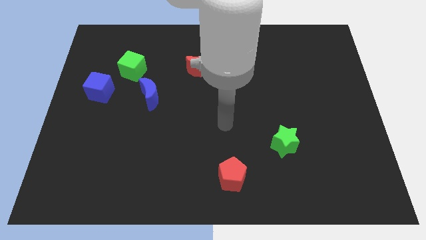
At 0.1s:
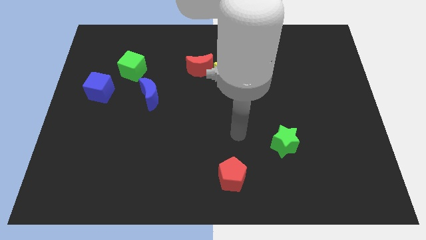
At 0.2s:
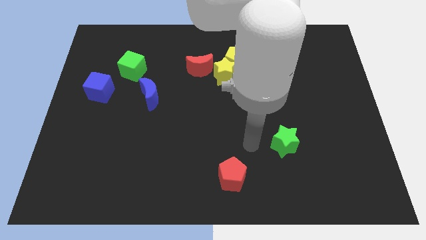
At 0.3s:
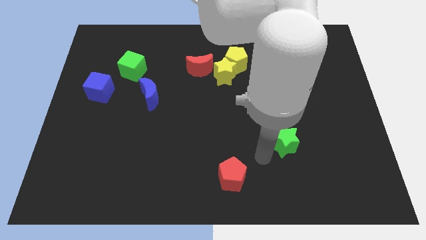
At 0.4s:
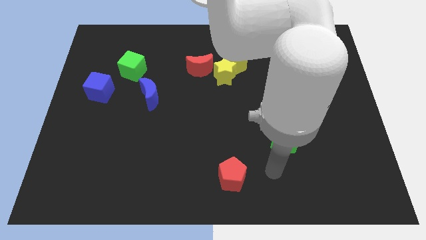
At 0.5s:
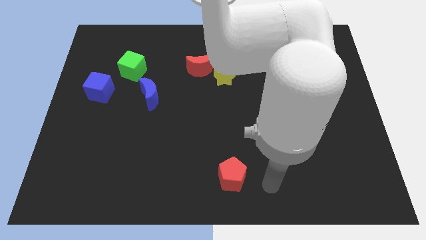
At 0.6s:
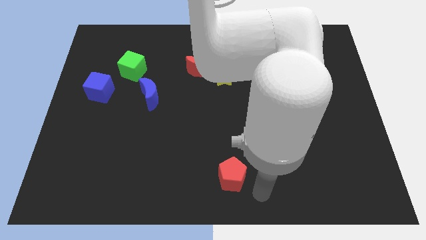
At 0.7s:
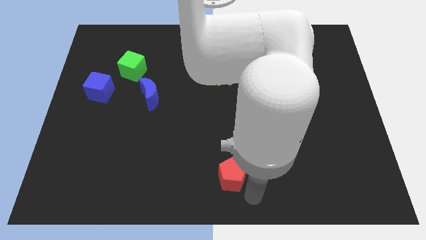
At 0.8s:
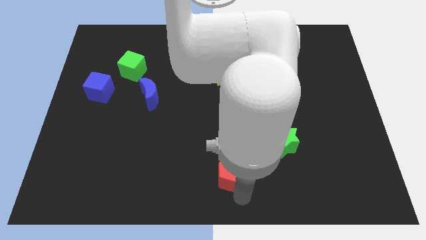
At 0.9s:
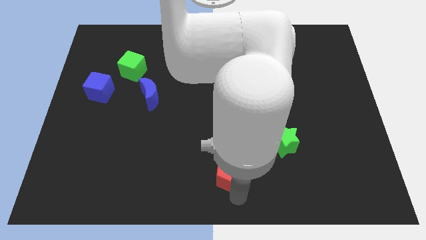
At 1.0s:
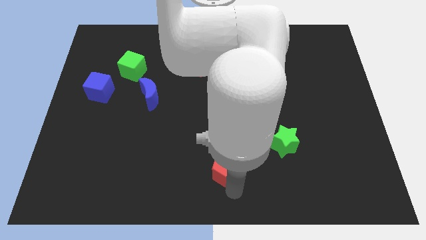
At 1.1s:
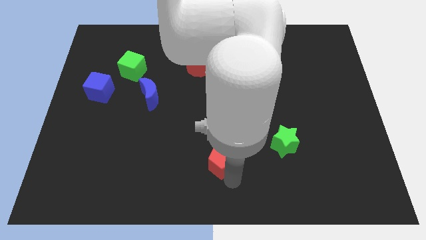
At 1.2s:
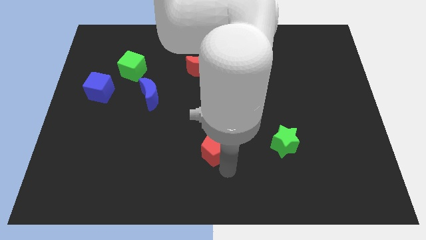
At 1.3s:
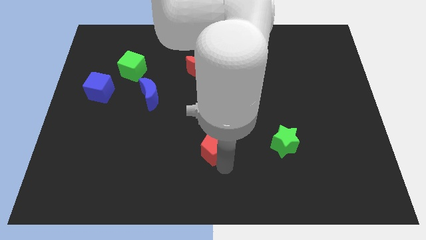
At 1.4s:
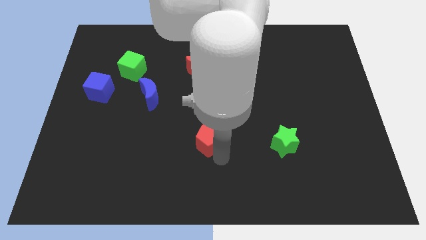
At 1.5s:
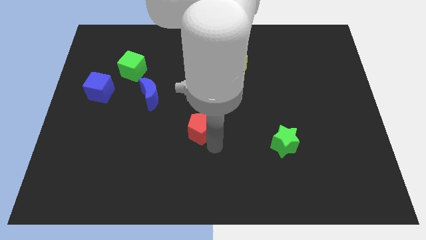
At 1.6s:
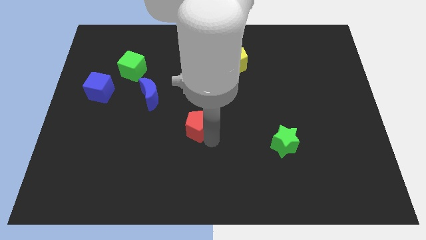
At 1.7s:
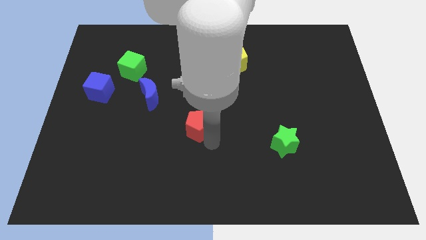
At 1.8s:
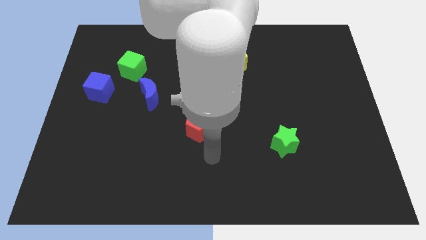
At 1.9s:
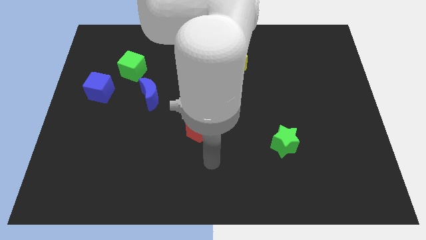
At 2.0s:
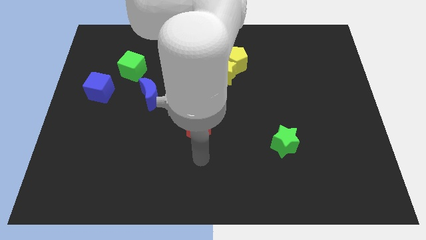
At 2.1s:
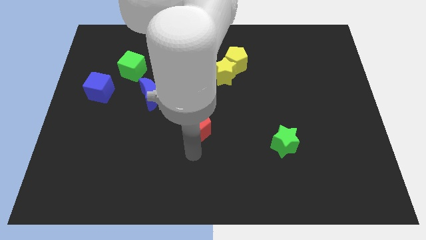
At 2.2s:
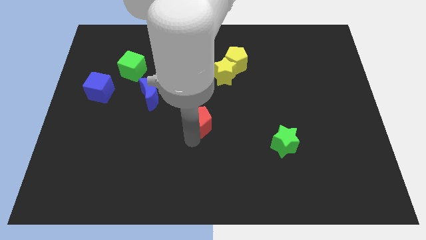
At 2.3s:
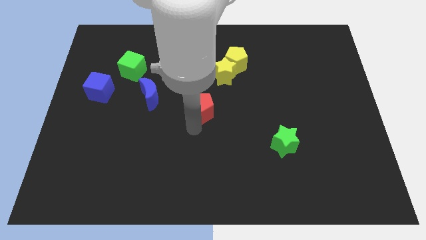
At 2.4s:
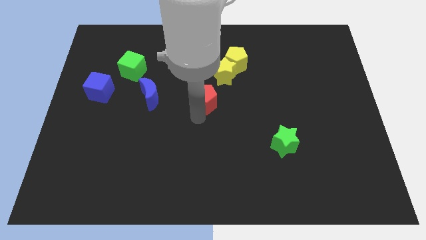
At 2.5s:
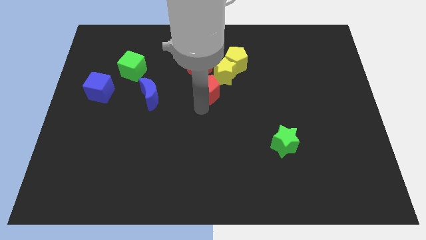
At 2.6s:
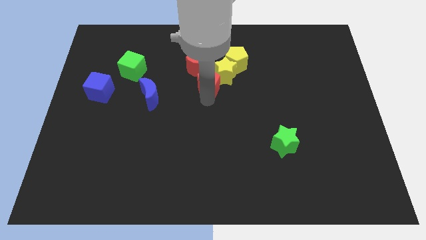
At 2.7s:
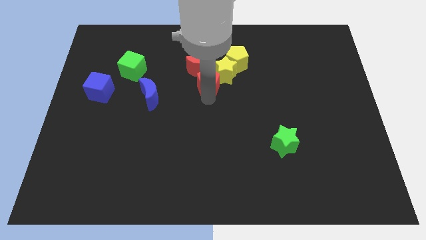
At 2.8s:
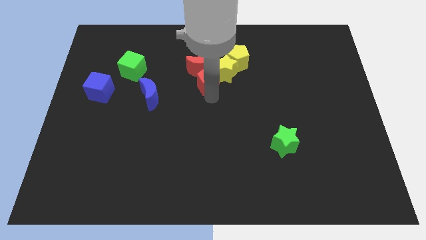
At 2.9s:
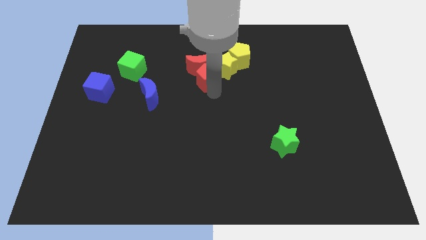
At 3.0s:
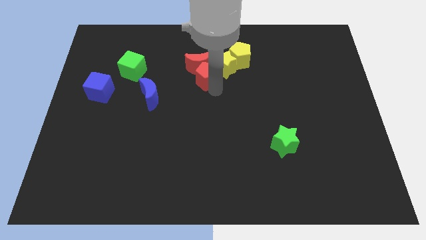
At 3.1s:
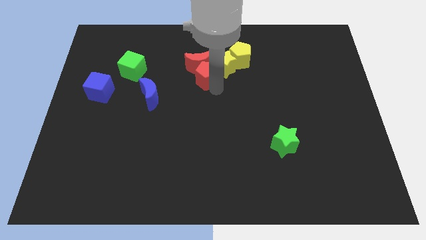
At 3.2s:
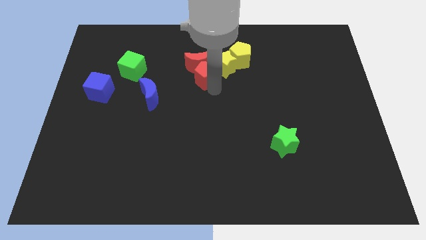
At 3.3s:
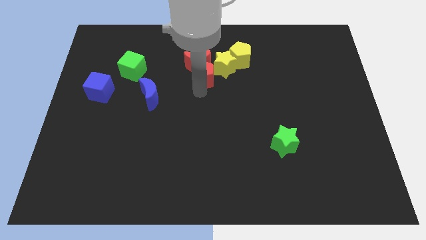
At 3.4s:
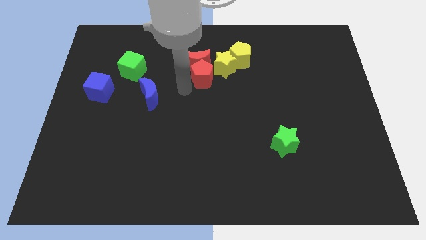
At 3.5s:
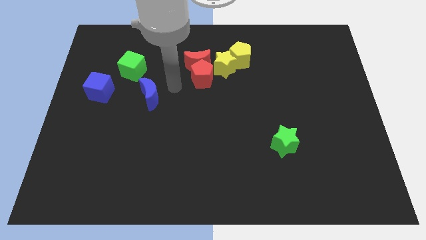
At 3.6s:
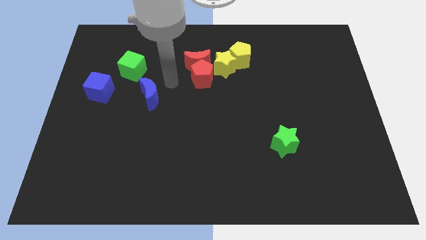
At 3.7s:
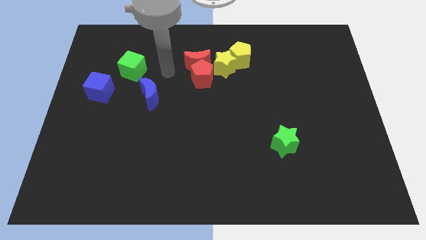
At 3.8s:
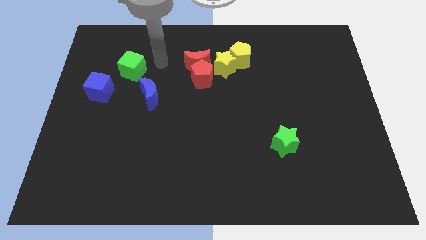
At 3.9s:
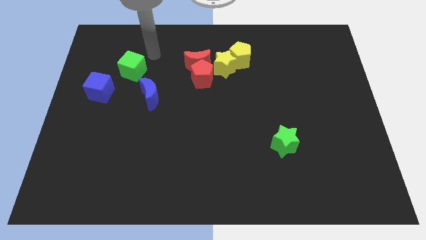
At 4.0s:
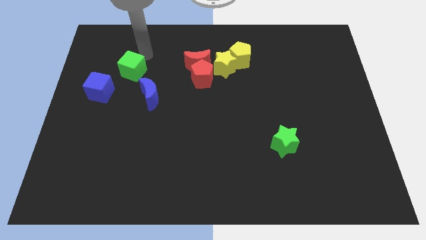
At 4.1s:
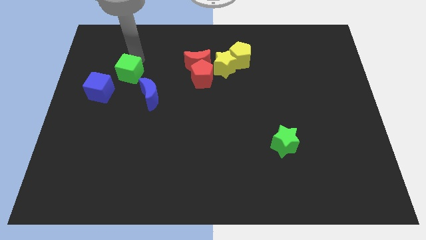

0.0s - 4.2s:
push the red pentagon below the red crescent

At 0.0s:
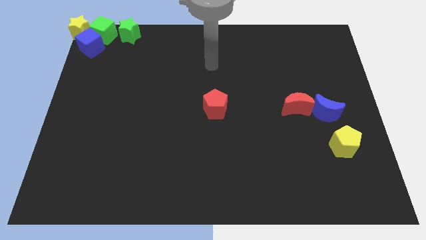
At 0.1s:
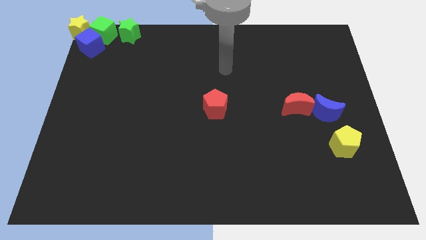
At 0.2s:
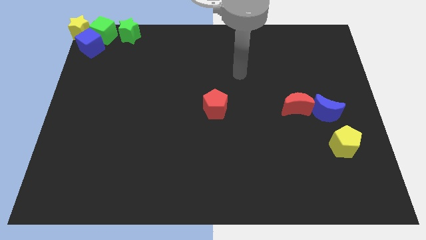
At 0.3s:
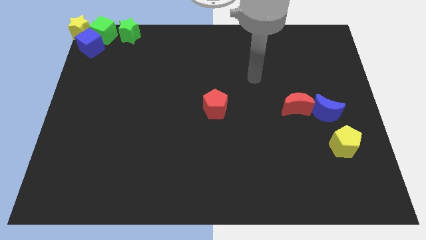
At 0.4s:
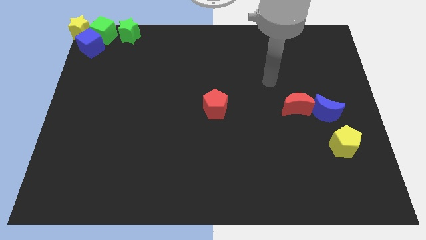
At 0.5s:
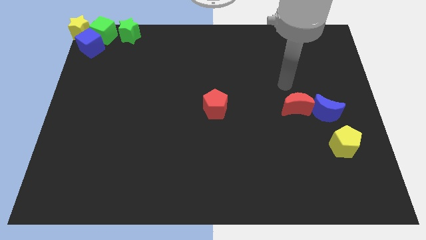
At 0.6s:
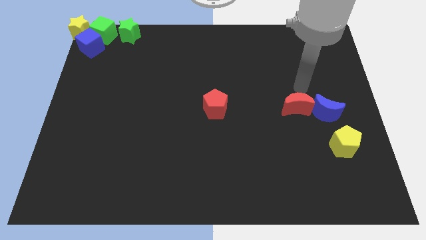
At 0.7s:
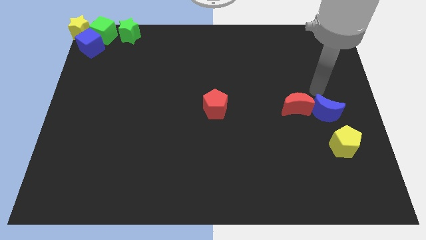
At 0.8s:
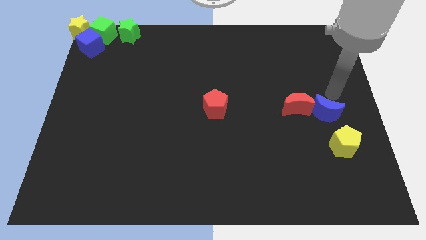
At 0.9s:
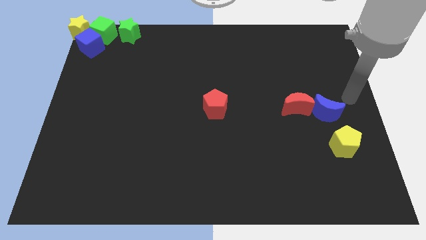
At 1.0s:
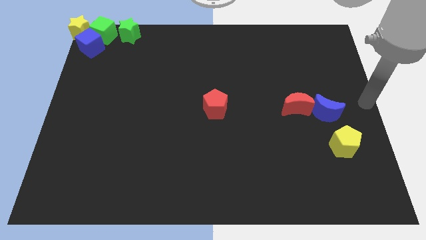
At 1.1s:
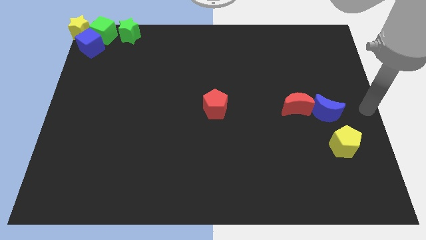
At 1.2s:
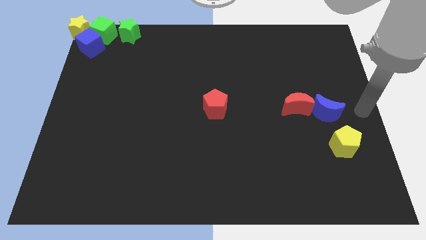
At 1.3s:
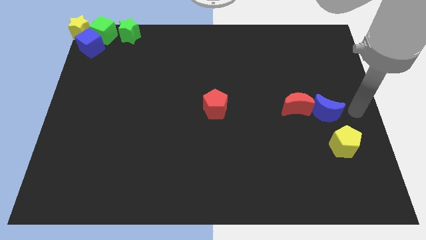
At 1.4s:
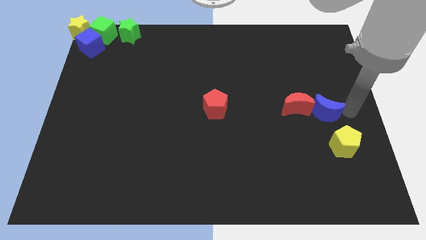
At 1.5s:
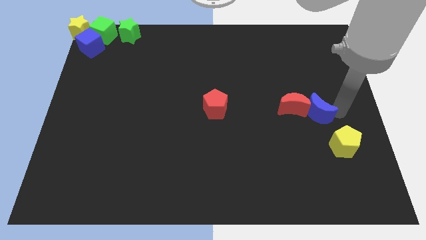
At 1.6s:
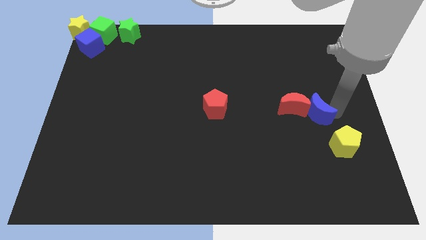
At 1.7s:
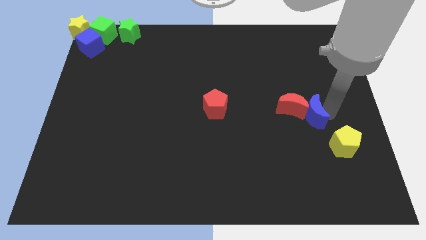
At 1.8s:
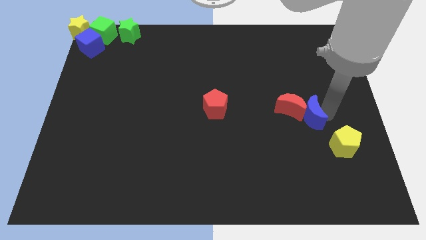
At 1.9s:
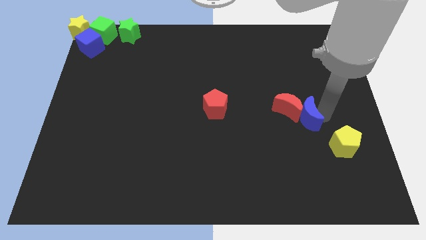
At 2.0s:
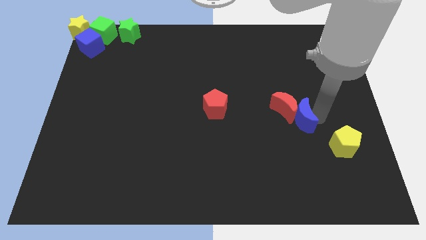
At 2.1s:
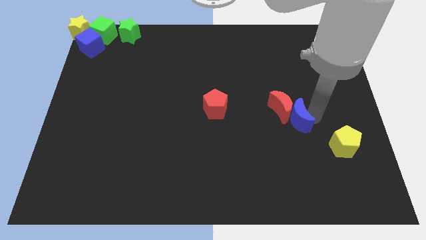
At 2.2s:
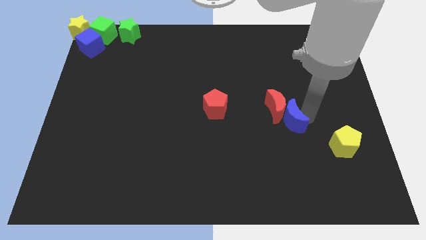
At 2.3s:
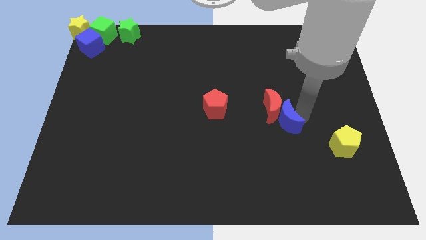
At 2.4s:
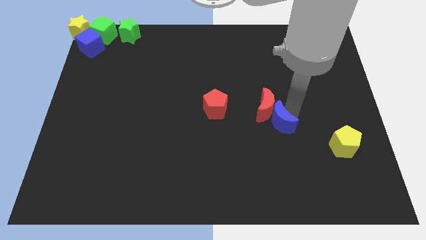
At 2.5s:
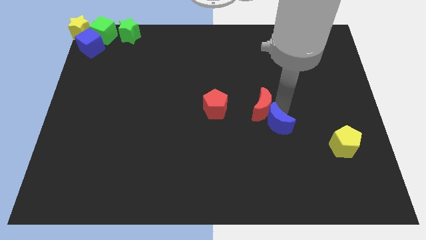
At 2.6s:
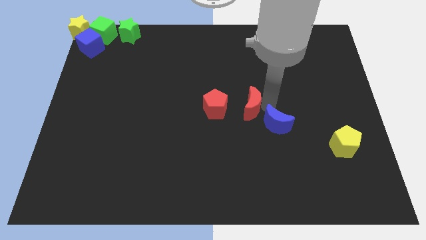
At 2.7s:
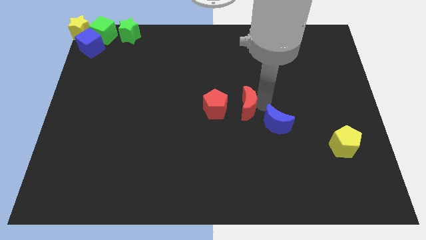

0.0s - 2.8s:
push the red crescent towards the center of the board

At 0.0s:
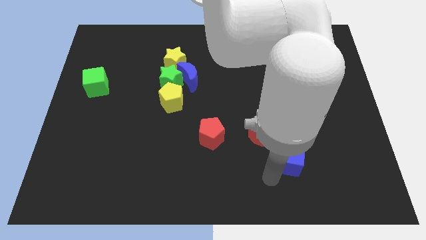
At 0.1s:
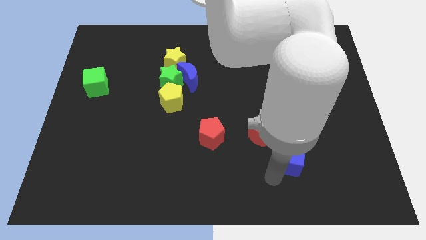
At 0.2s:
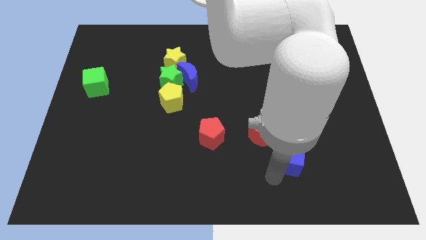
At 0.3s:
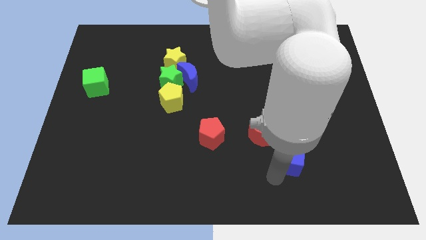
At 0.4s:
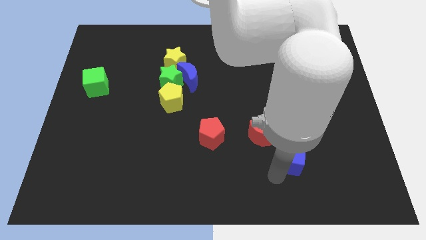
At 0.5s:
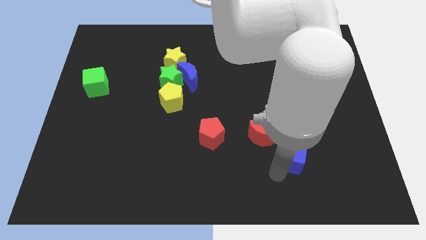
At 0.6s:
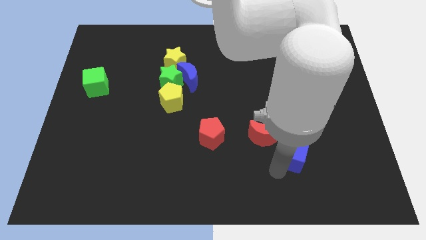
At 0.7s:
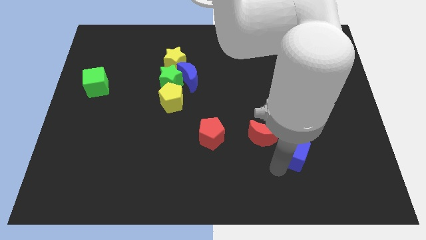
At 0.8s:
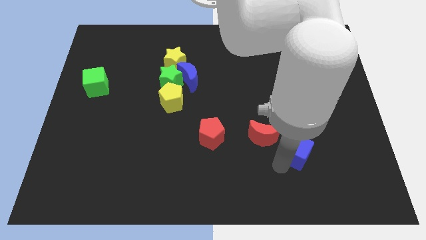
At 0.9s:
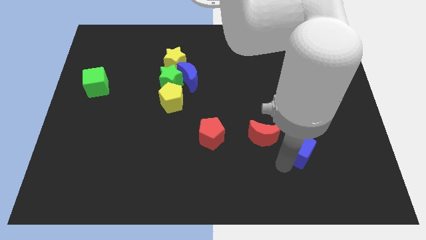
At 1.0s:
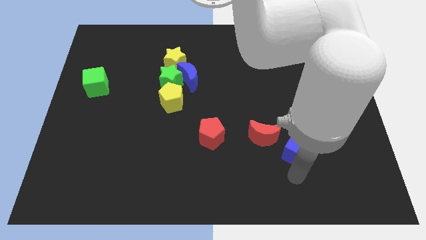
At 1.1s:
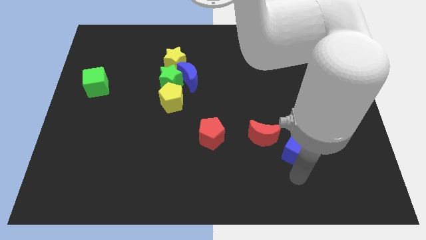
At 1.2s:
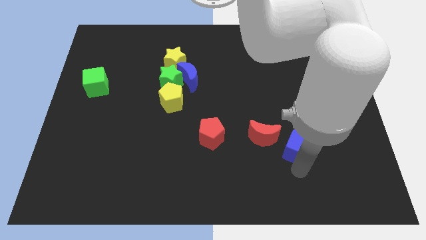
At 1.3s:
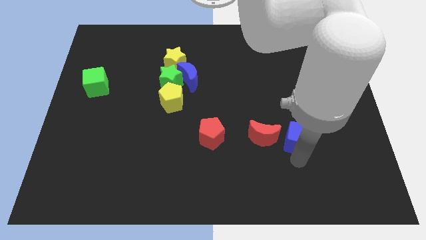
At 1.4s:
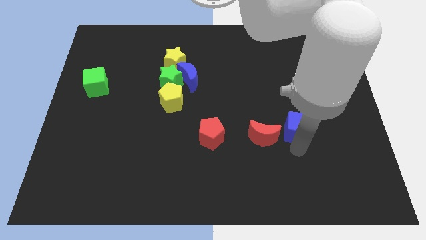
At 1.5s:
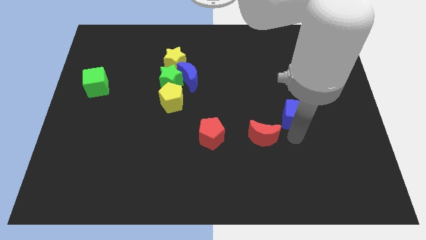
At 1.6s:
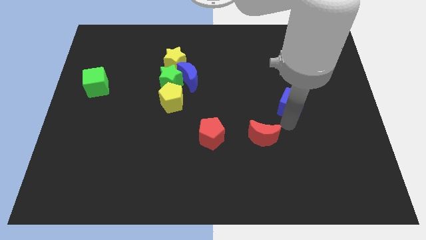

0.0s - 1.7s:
move the blue cube towards the center right of the board

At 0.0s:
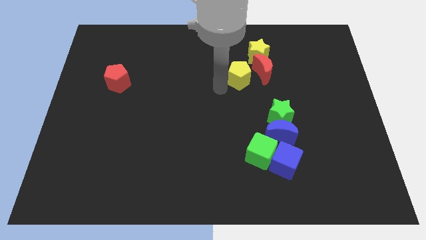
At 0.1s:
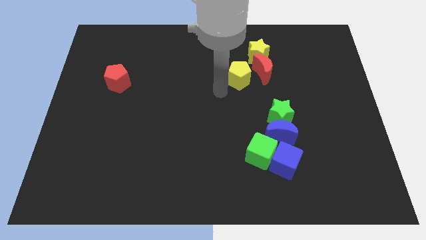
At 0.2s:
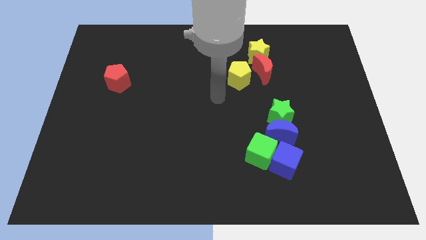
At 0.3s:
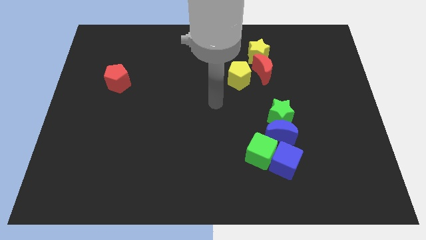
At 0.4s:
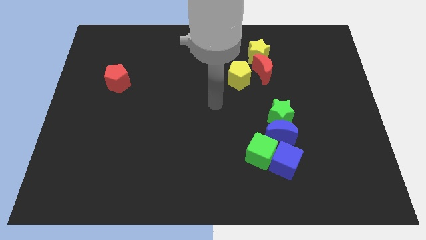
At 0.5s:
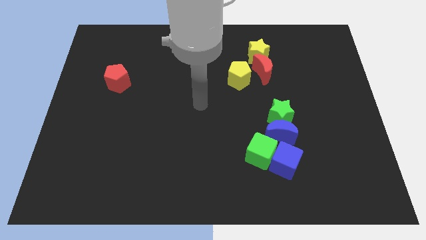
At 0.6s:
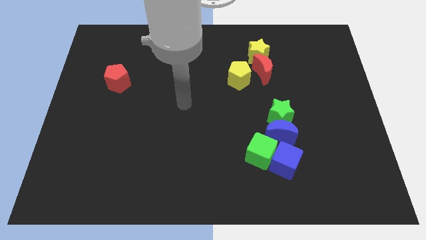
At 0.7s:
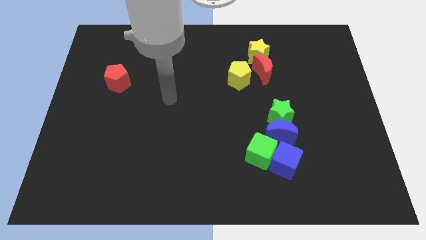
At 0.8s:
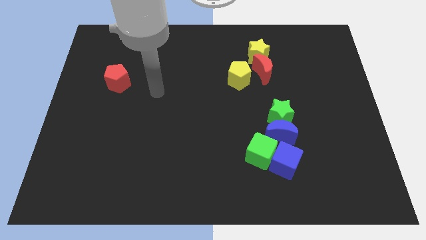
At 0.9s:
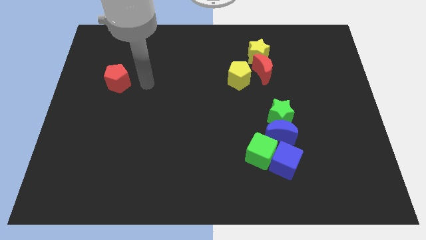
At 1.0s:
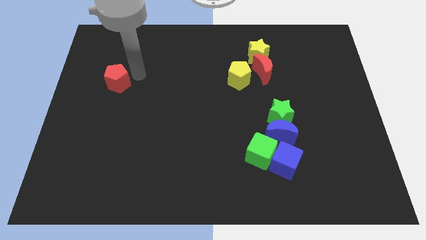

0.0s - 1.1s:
move your hand towards the red pentagon
